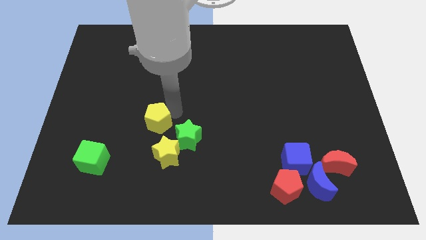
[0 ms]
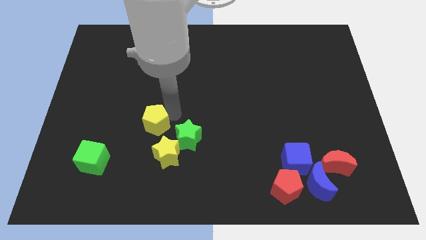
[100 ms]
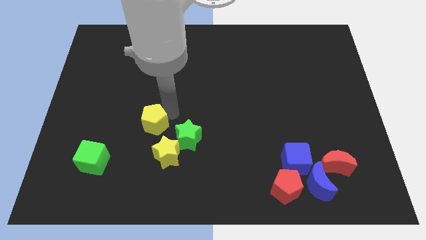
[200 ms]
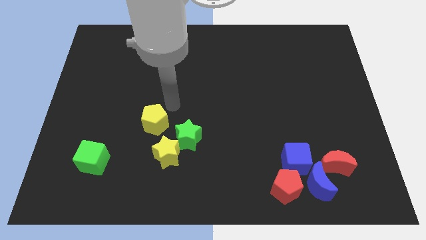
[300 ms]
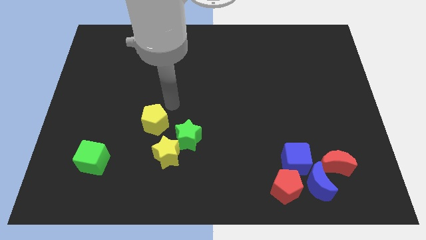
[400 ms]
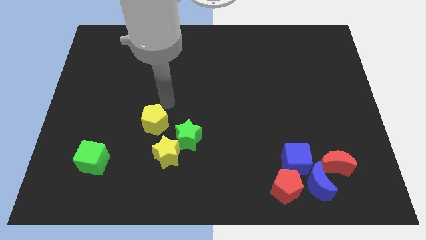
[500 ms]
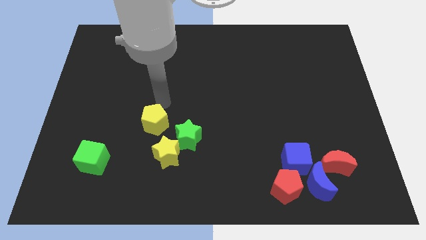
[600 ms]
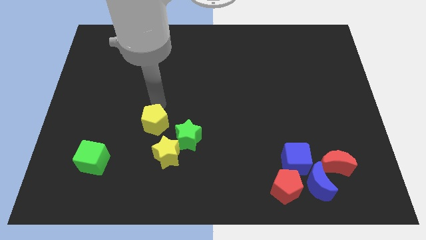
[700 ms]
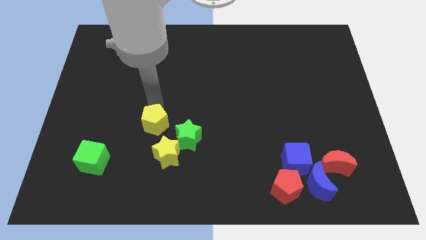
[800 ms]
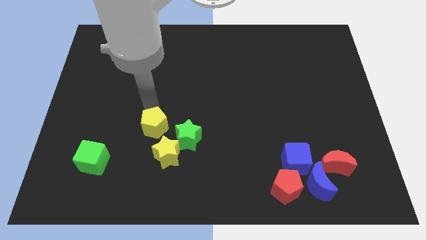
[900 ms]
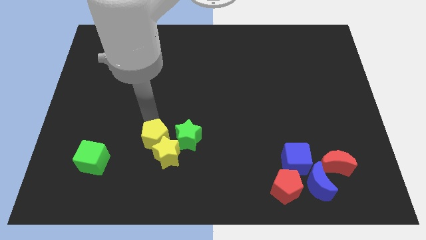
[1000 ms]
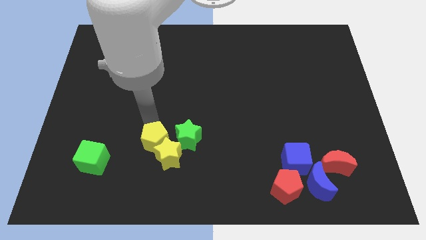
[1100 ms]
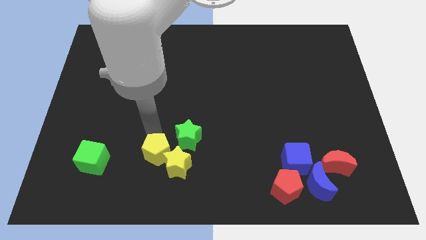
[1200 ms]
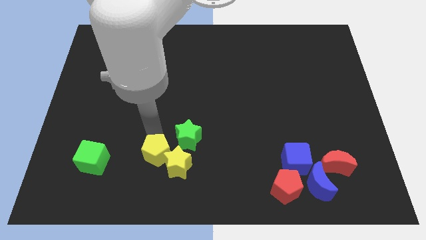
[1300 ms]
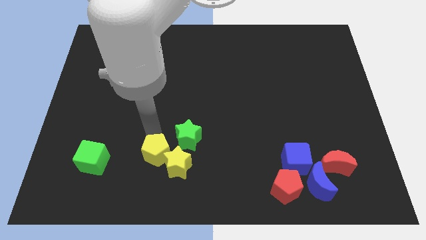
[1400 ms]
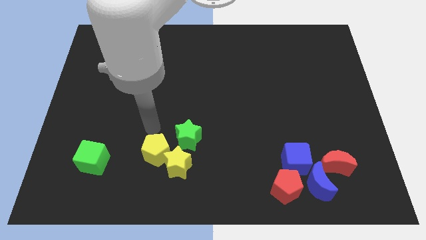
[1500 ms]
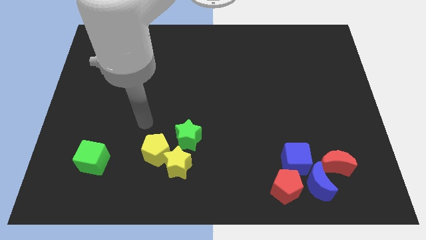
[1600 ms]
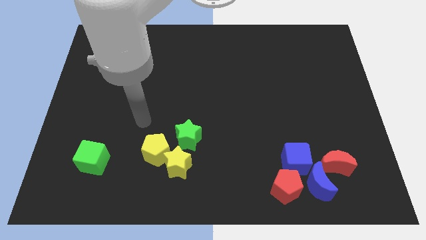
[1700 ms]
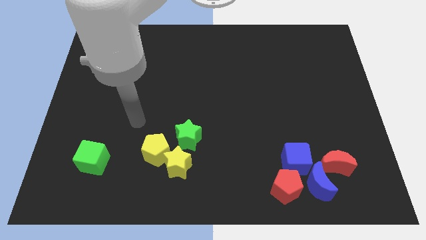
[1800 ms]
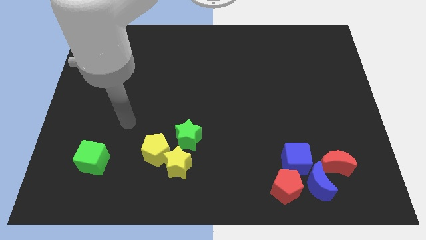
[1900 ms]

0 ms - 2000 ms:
slide the yellow pentagon into the yellow star

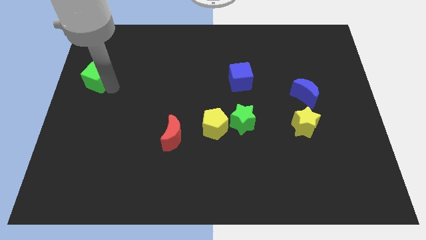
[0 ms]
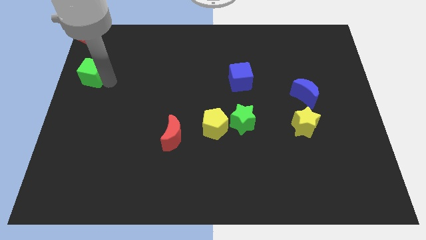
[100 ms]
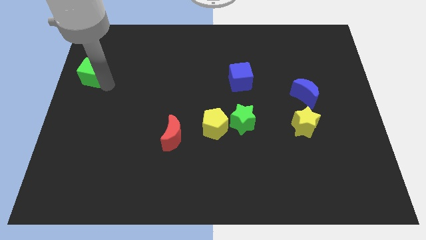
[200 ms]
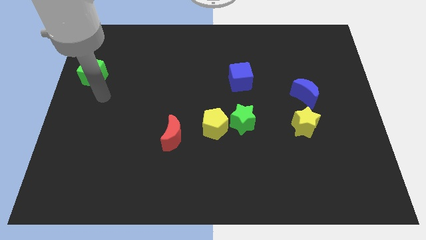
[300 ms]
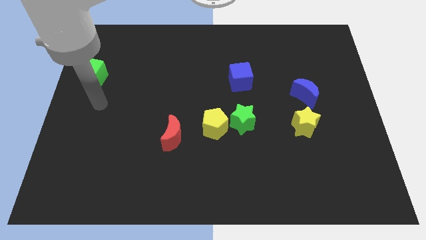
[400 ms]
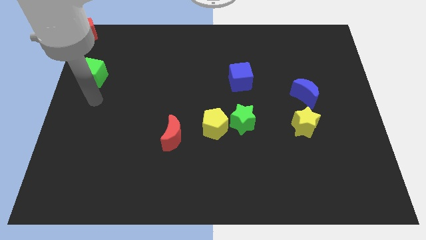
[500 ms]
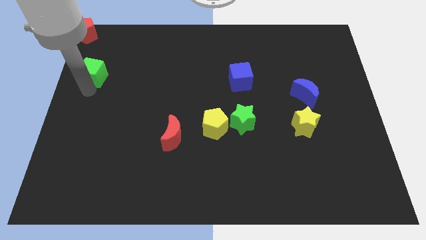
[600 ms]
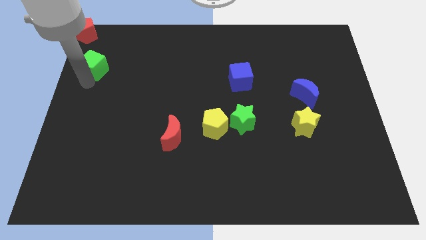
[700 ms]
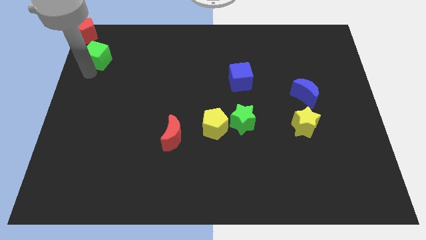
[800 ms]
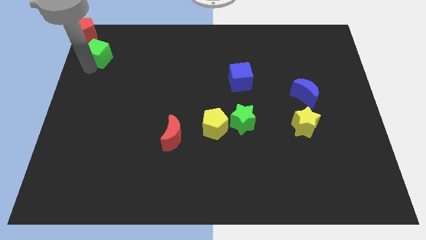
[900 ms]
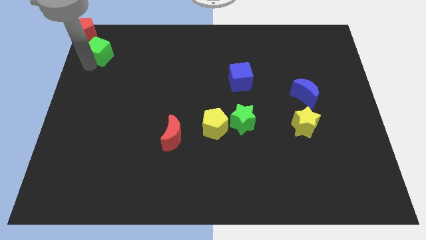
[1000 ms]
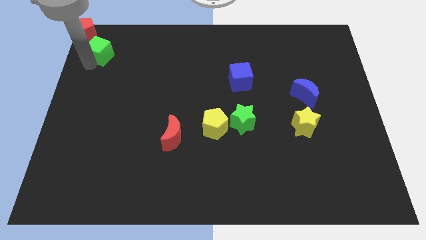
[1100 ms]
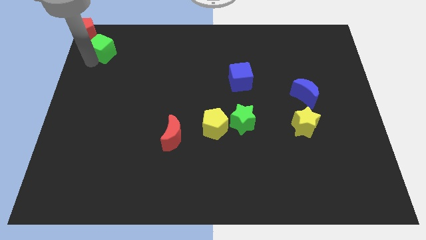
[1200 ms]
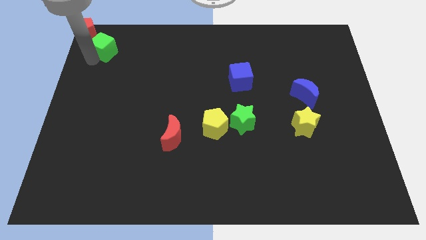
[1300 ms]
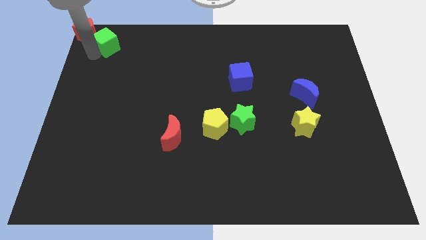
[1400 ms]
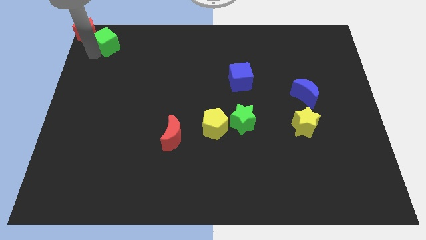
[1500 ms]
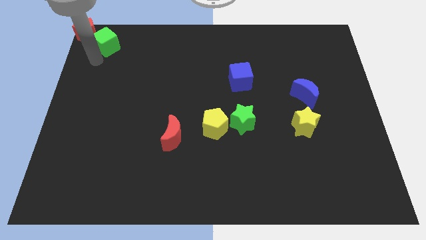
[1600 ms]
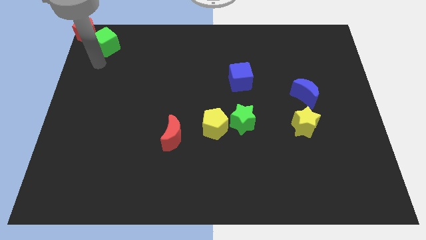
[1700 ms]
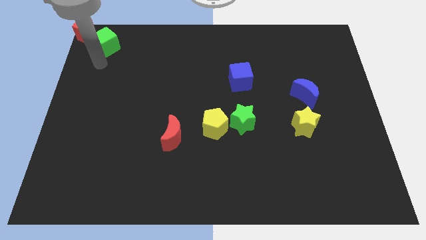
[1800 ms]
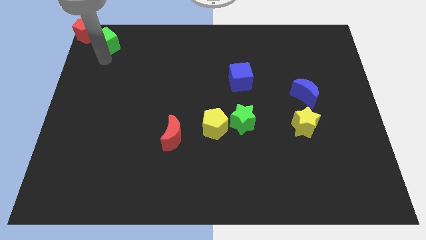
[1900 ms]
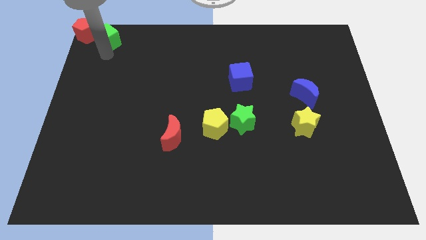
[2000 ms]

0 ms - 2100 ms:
move the green cube to the right side of the red pentagon

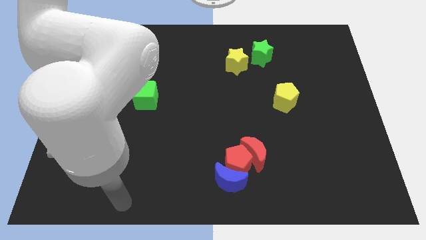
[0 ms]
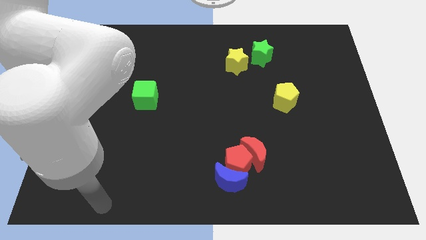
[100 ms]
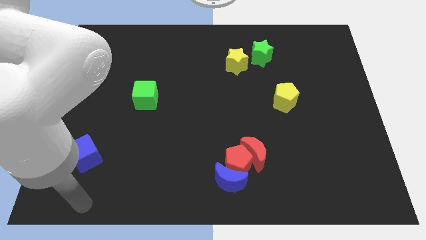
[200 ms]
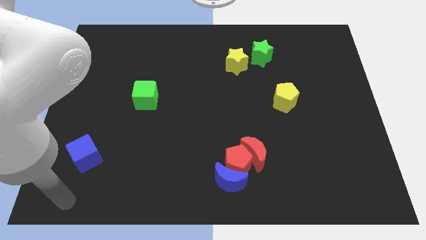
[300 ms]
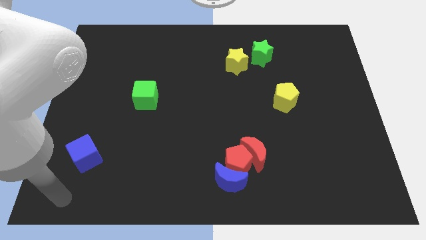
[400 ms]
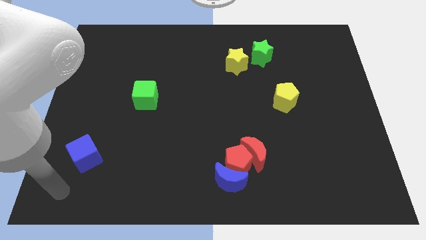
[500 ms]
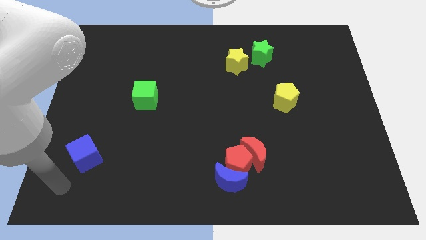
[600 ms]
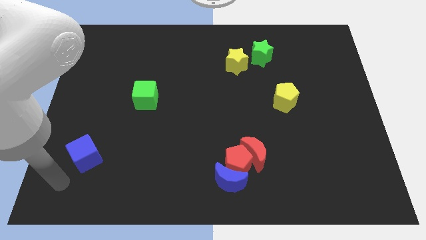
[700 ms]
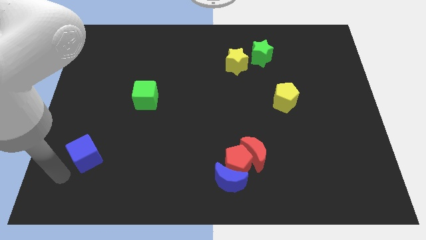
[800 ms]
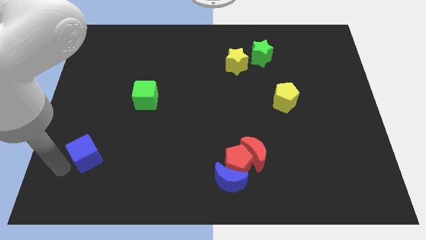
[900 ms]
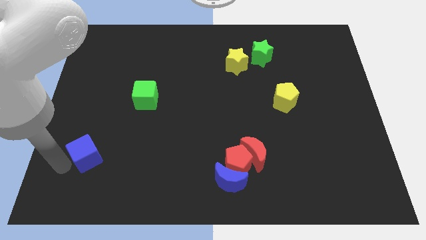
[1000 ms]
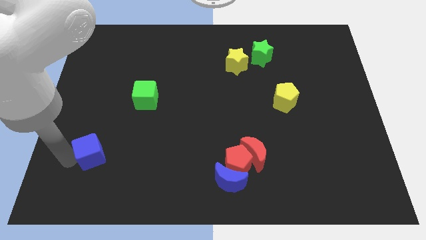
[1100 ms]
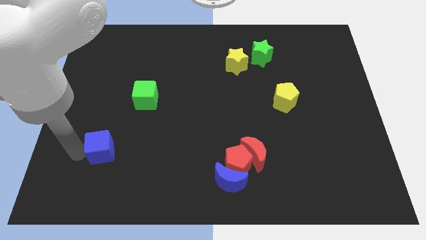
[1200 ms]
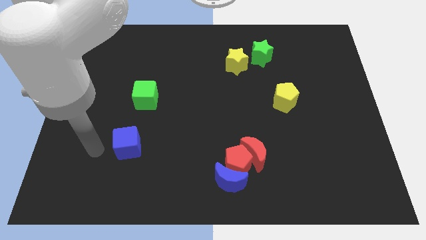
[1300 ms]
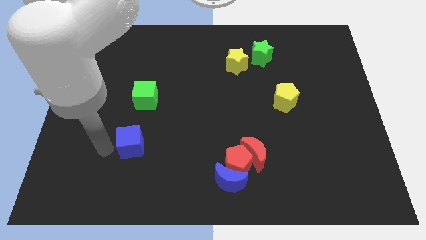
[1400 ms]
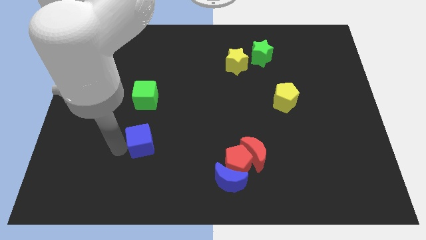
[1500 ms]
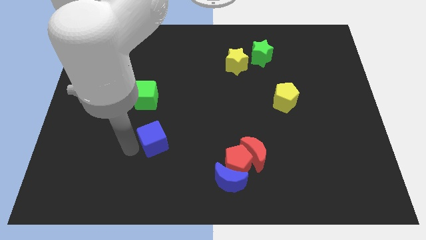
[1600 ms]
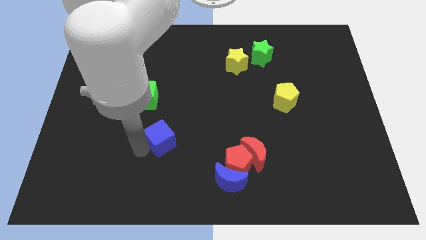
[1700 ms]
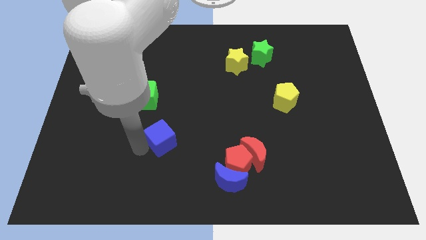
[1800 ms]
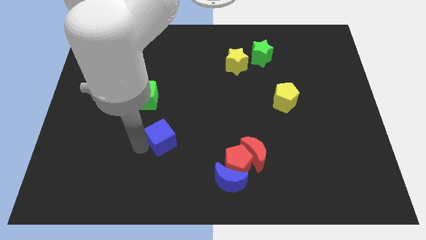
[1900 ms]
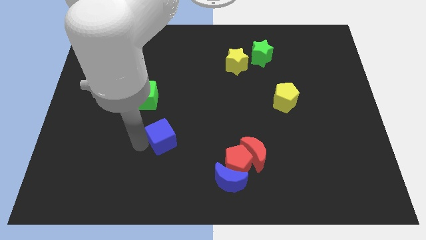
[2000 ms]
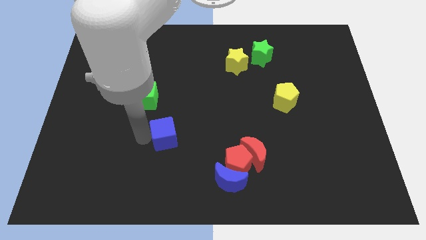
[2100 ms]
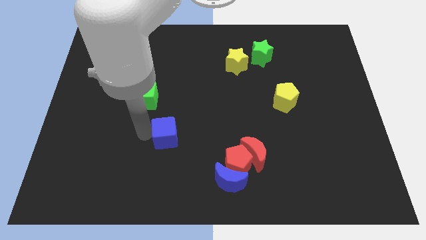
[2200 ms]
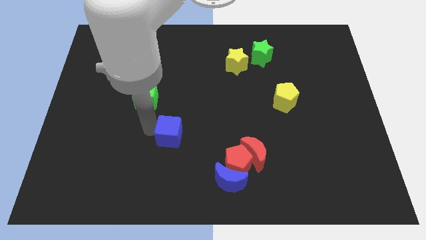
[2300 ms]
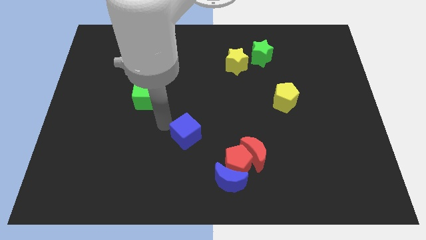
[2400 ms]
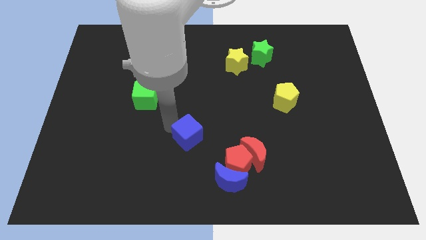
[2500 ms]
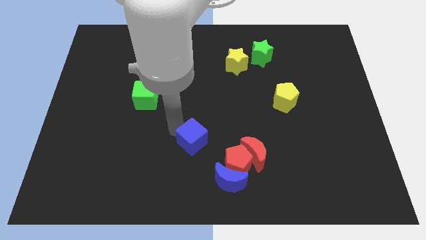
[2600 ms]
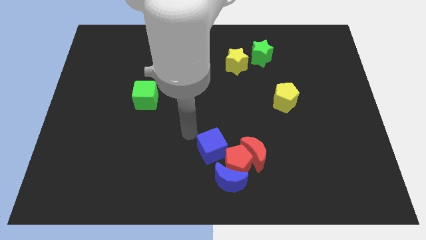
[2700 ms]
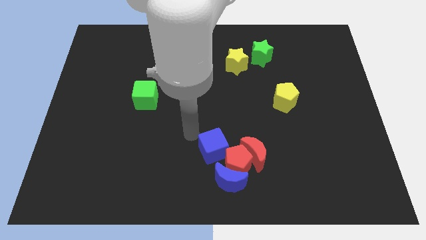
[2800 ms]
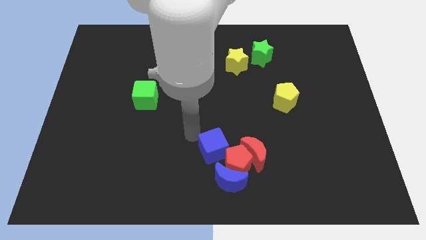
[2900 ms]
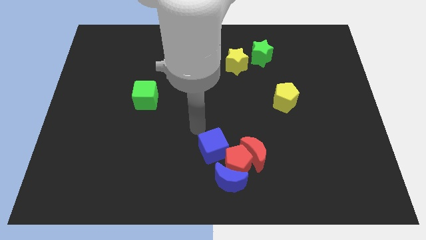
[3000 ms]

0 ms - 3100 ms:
push the blue cube closer to the red pentagon

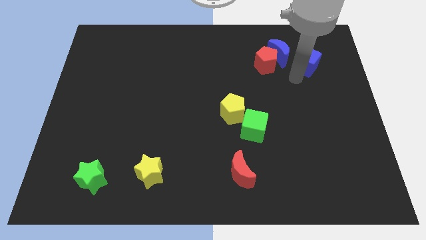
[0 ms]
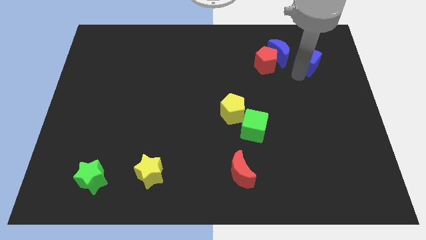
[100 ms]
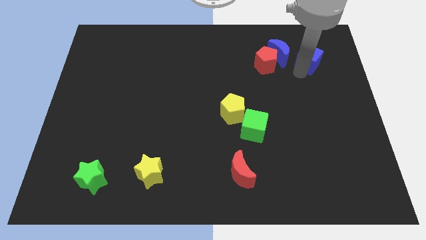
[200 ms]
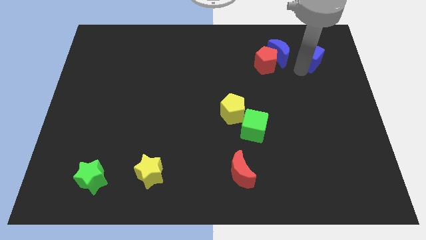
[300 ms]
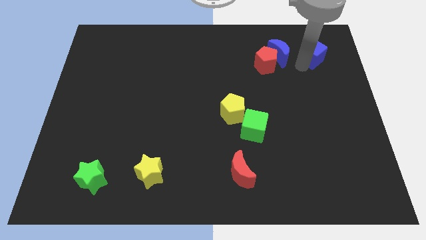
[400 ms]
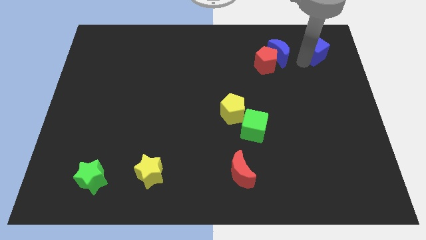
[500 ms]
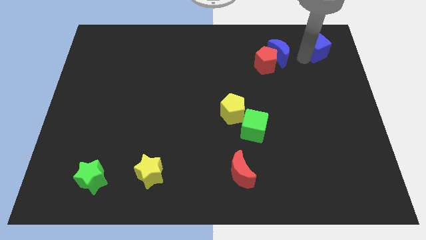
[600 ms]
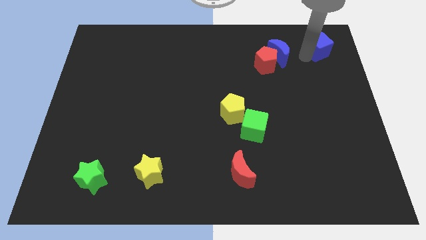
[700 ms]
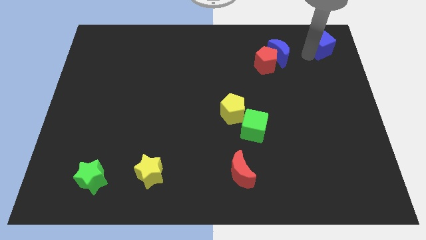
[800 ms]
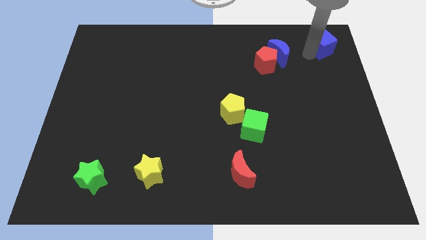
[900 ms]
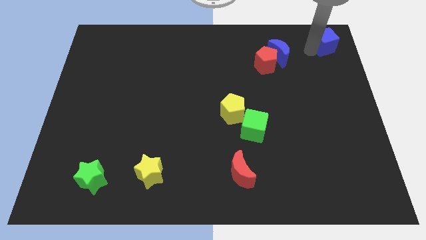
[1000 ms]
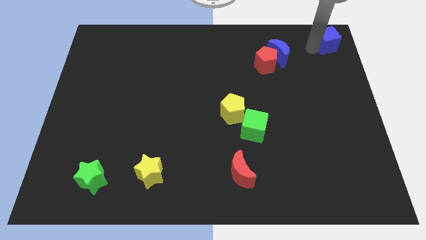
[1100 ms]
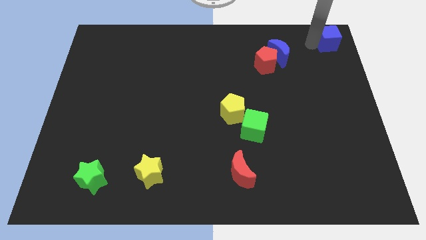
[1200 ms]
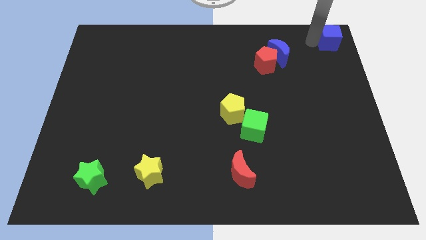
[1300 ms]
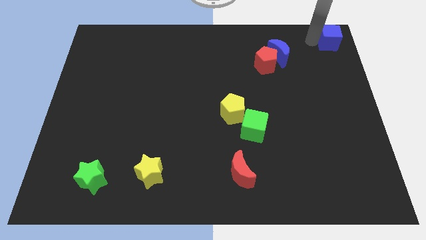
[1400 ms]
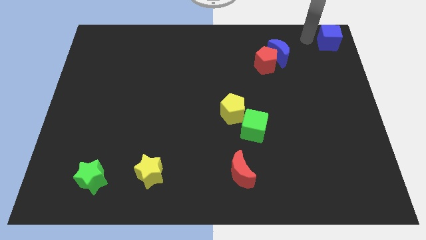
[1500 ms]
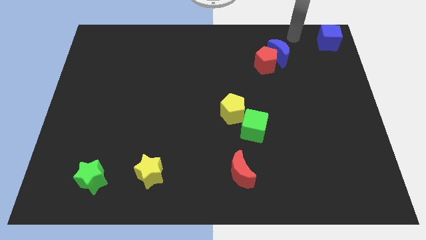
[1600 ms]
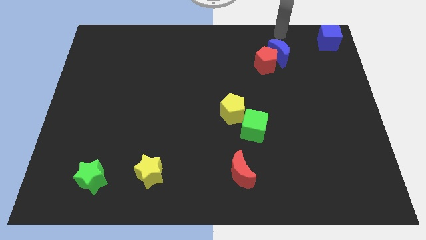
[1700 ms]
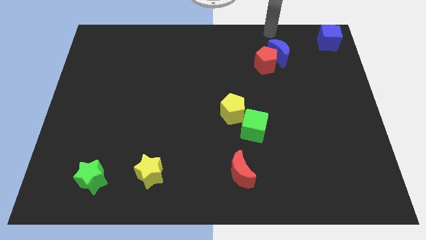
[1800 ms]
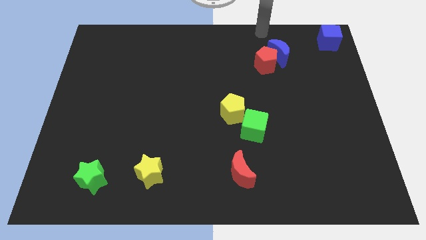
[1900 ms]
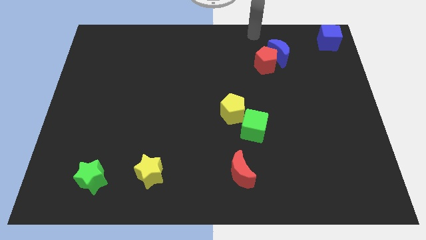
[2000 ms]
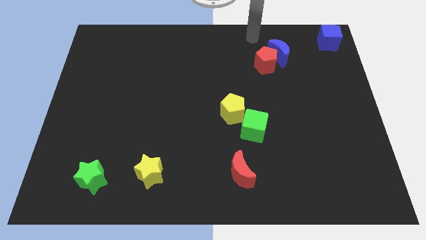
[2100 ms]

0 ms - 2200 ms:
push the blue cube to the top right side
